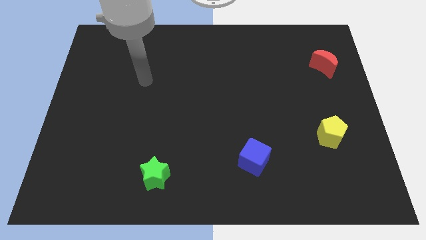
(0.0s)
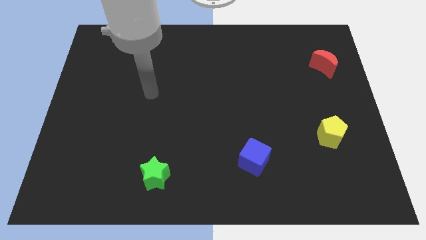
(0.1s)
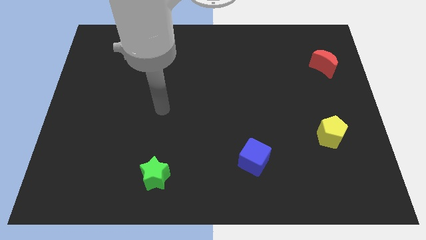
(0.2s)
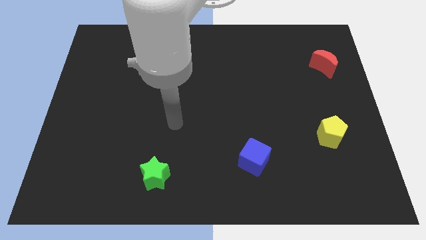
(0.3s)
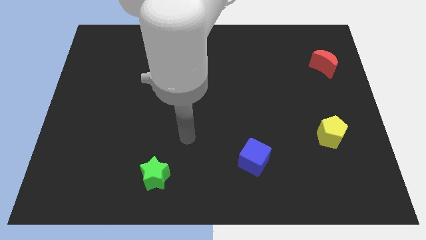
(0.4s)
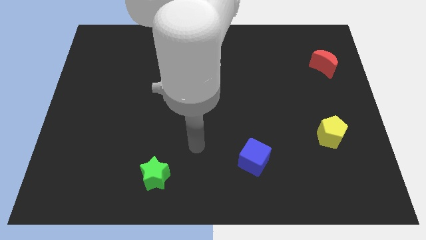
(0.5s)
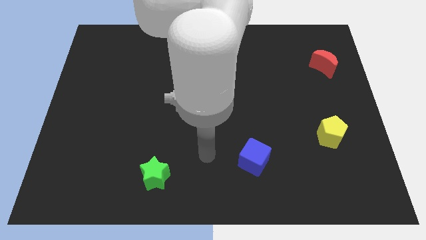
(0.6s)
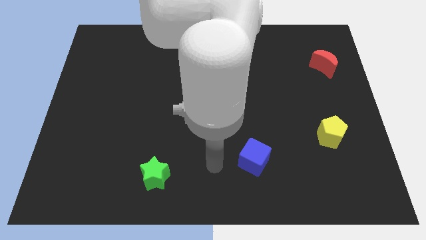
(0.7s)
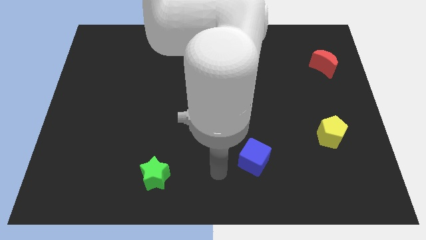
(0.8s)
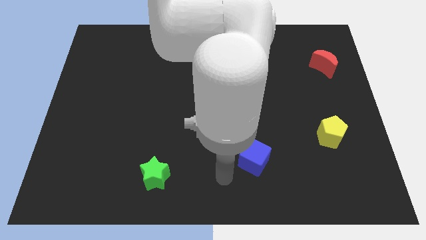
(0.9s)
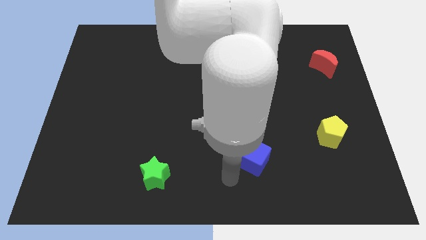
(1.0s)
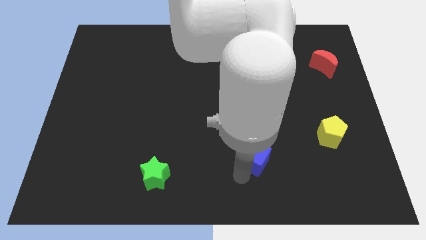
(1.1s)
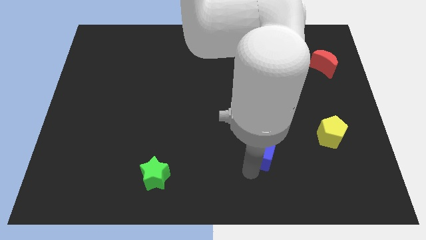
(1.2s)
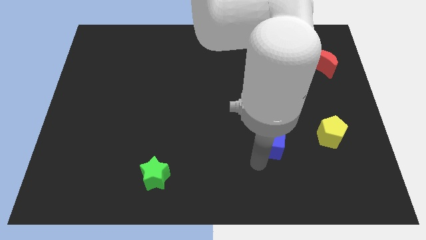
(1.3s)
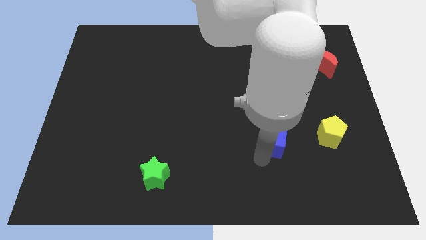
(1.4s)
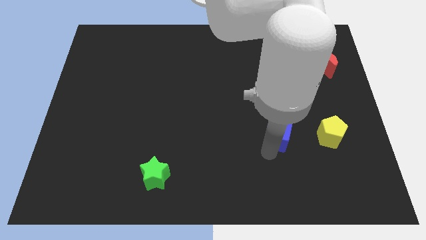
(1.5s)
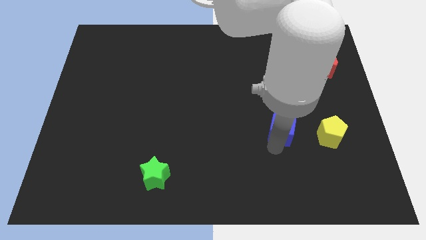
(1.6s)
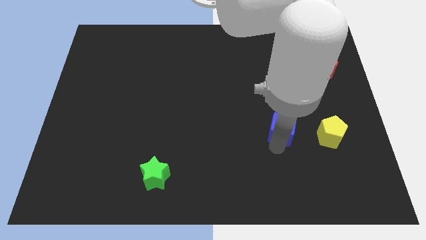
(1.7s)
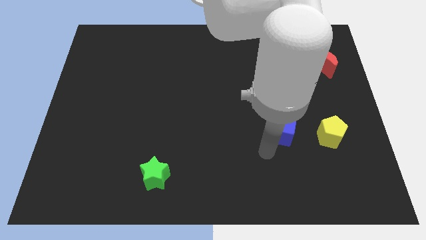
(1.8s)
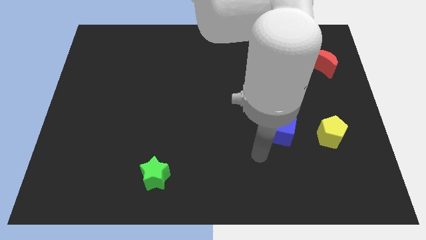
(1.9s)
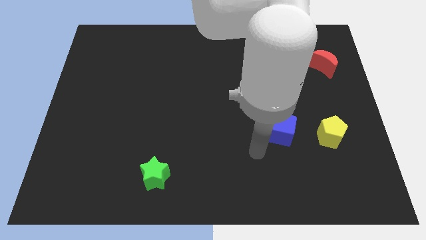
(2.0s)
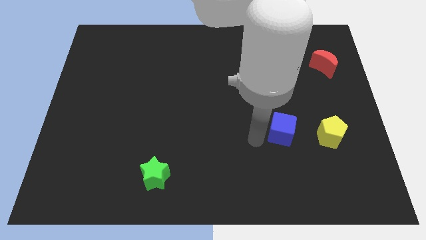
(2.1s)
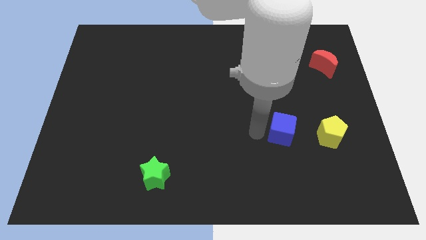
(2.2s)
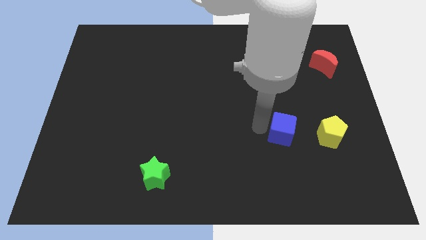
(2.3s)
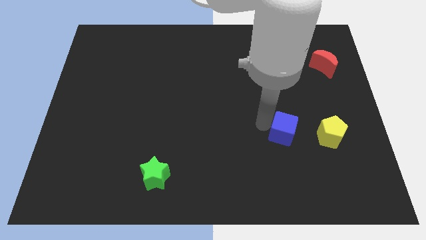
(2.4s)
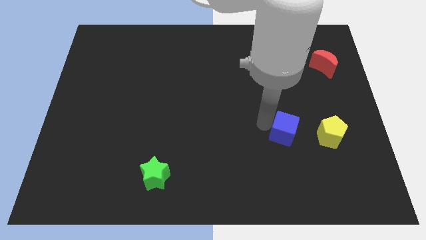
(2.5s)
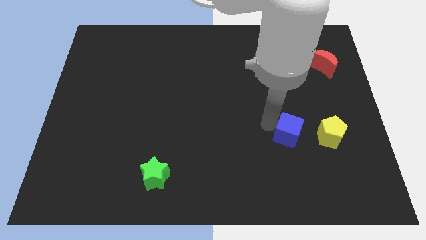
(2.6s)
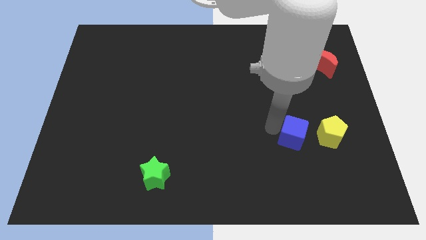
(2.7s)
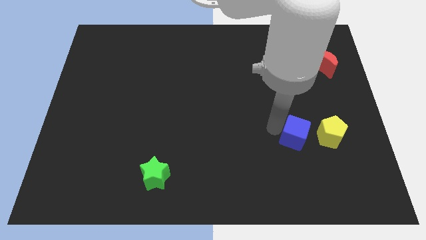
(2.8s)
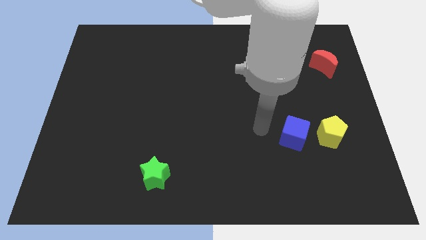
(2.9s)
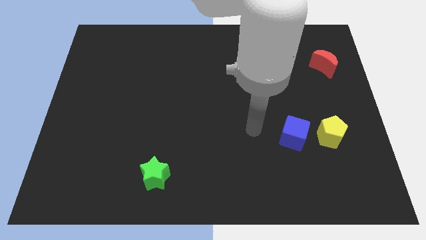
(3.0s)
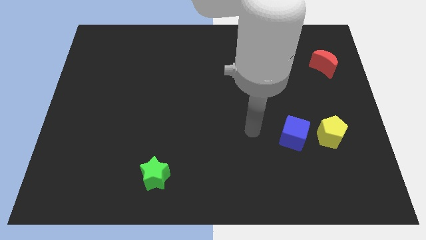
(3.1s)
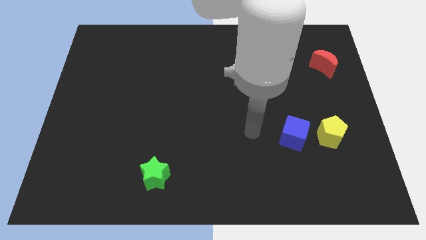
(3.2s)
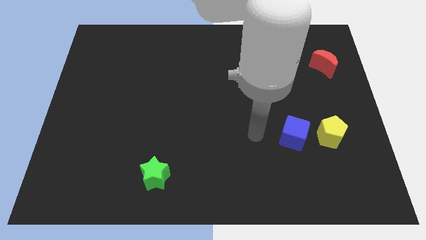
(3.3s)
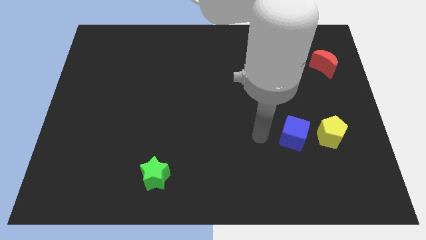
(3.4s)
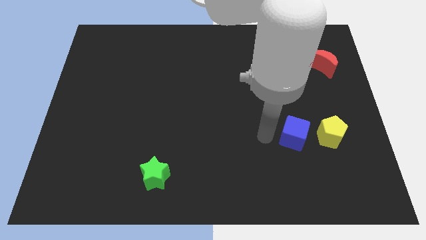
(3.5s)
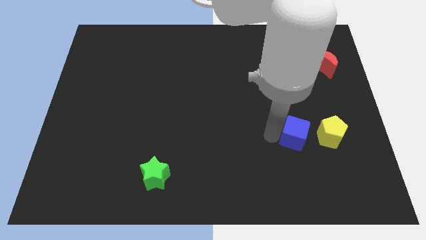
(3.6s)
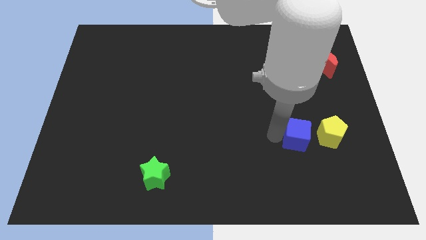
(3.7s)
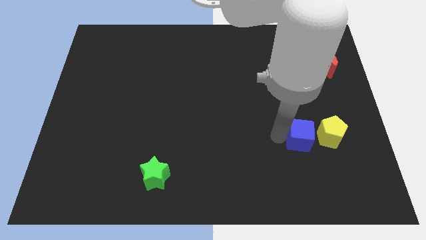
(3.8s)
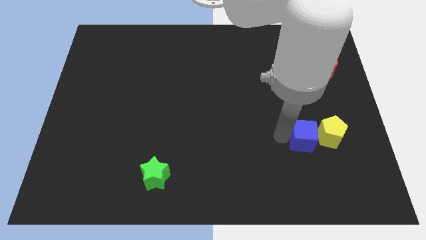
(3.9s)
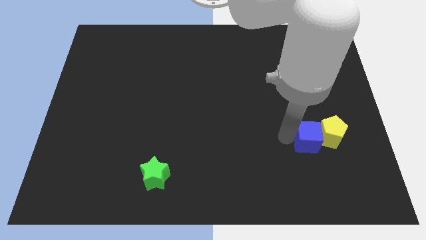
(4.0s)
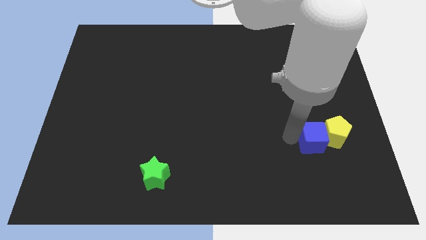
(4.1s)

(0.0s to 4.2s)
put the blue cube to the pentagon

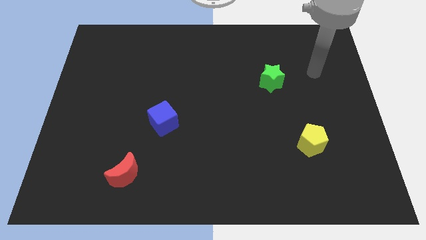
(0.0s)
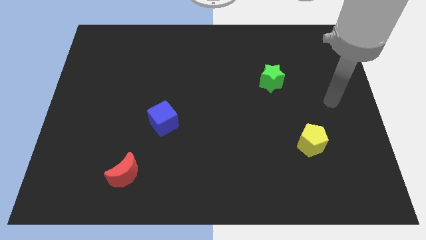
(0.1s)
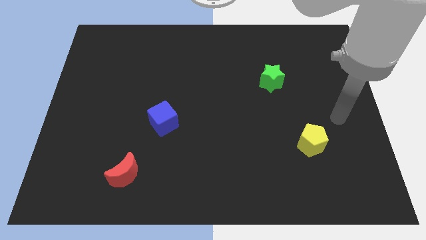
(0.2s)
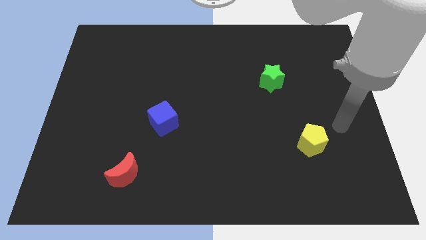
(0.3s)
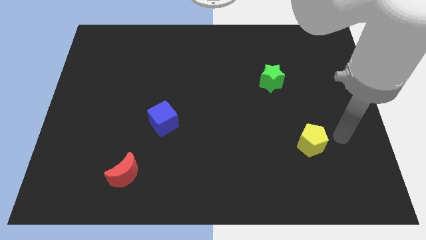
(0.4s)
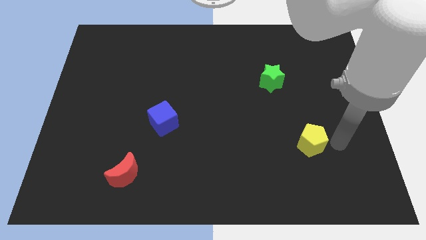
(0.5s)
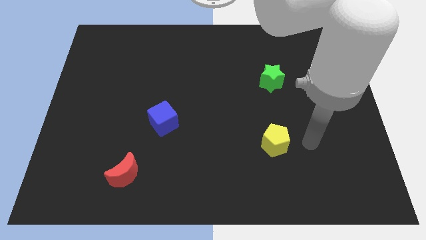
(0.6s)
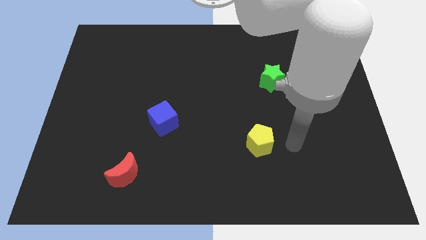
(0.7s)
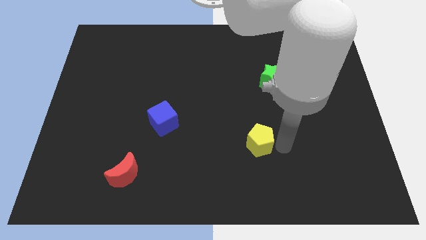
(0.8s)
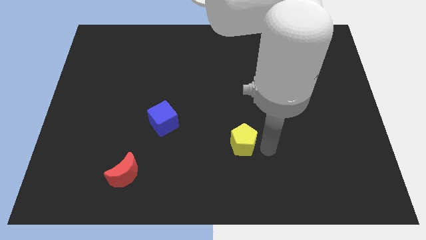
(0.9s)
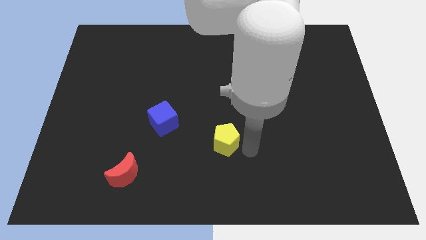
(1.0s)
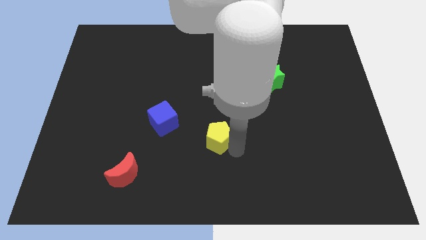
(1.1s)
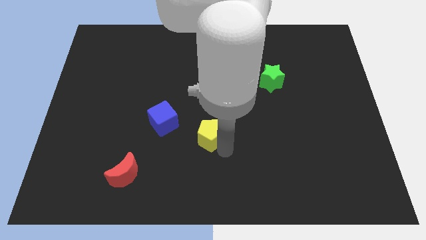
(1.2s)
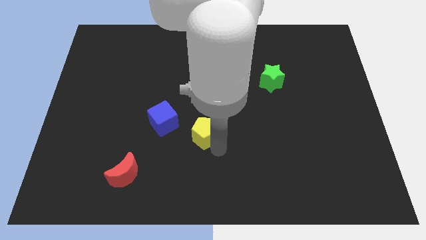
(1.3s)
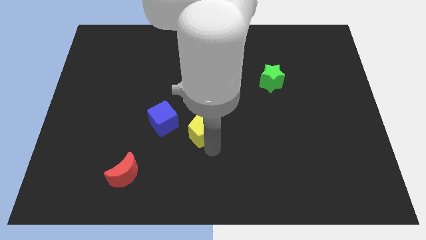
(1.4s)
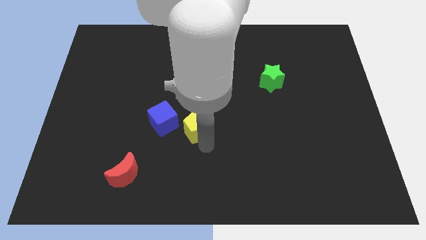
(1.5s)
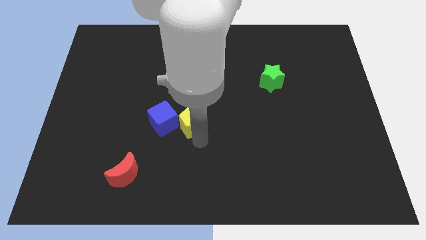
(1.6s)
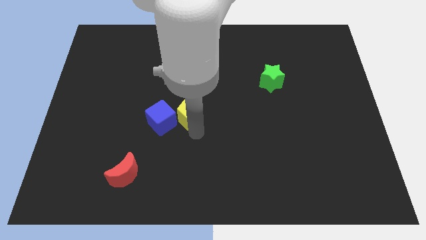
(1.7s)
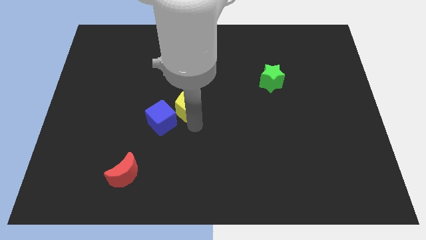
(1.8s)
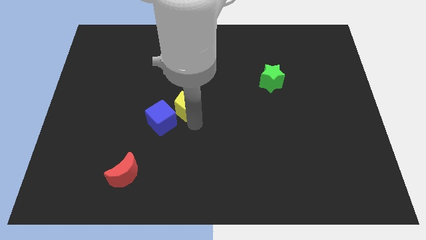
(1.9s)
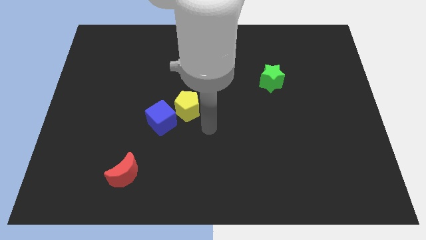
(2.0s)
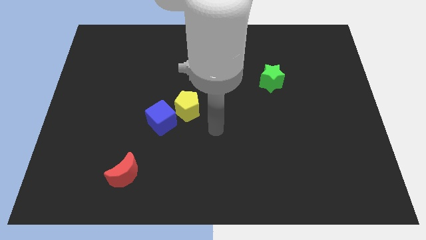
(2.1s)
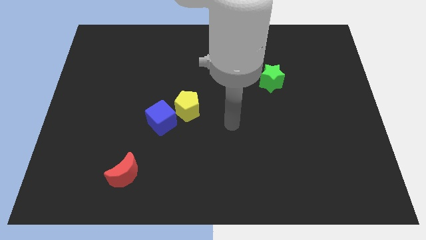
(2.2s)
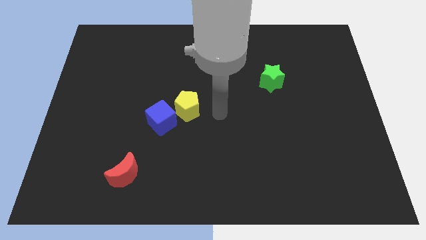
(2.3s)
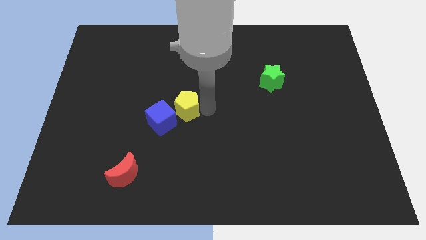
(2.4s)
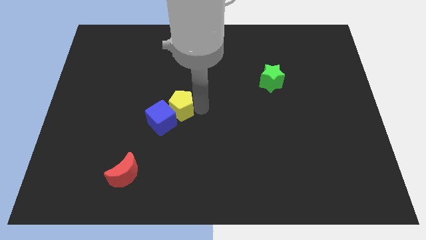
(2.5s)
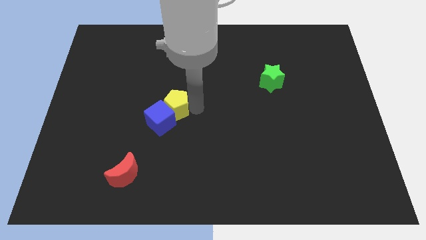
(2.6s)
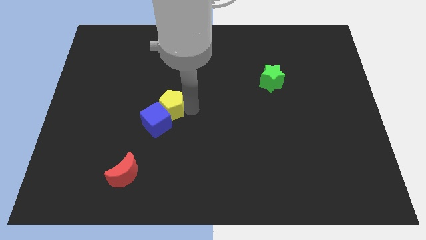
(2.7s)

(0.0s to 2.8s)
push the yellow pentagon next to the blue block

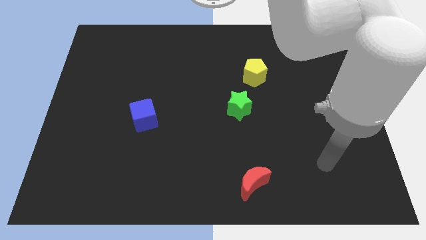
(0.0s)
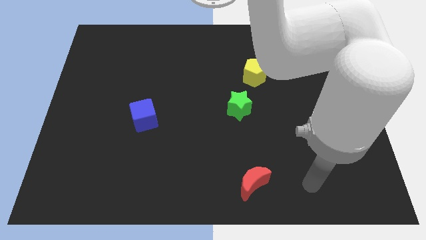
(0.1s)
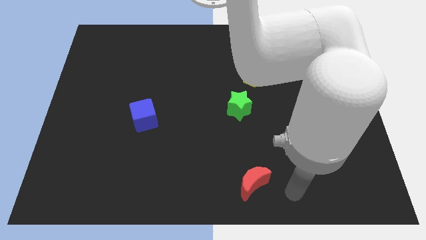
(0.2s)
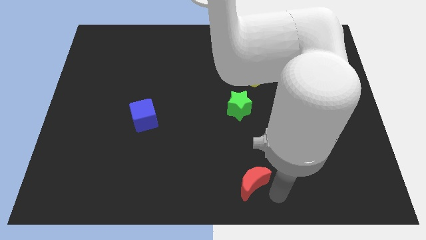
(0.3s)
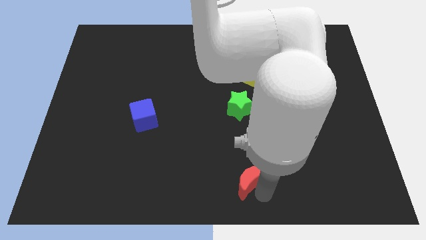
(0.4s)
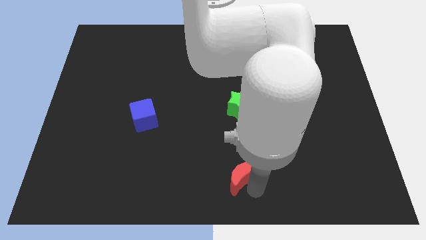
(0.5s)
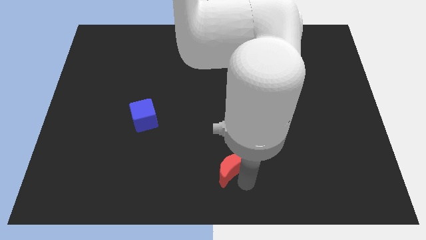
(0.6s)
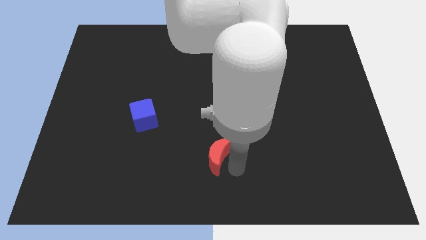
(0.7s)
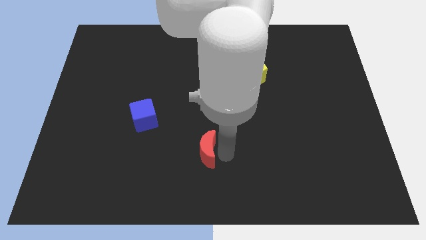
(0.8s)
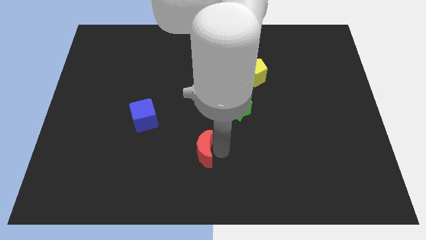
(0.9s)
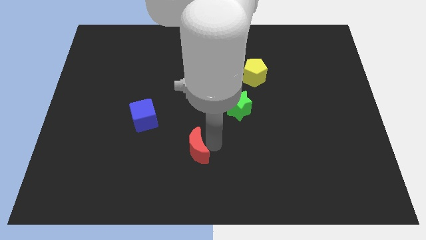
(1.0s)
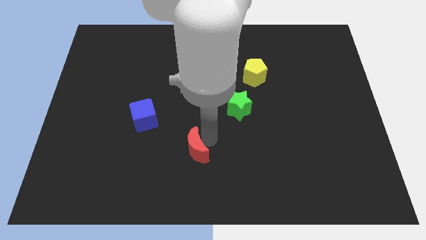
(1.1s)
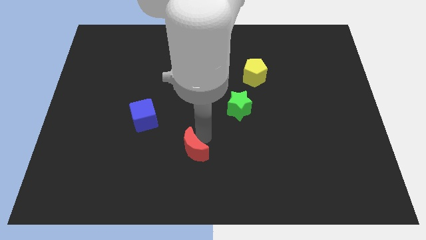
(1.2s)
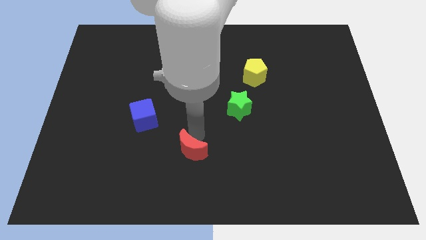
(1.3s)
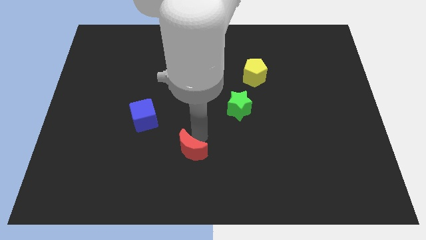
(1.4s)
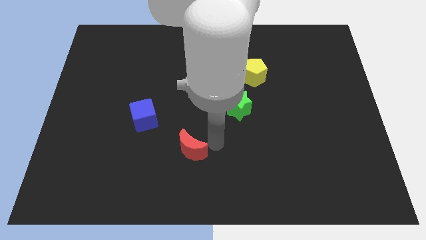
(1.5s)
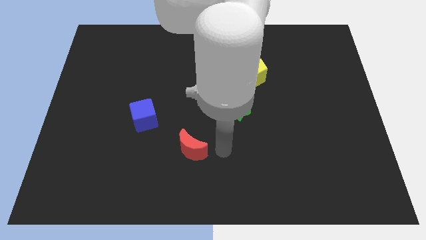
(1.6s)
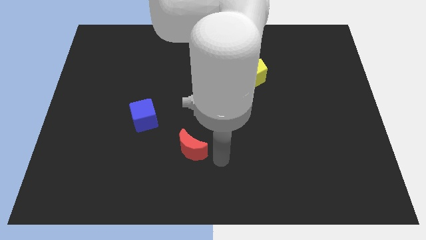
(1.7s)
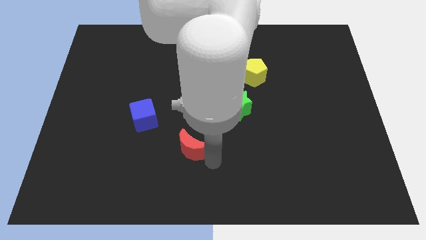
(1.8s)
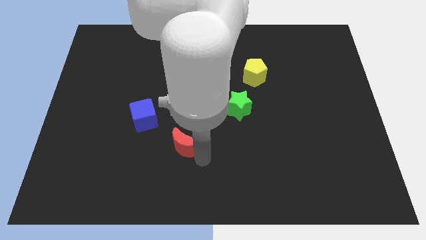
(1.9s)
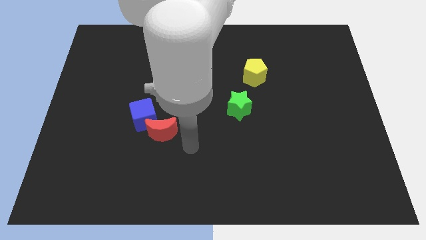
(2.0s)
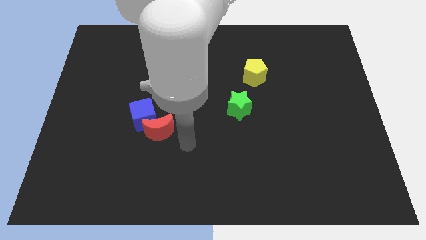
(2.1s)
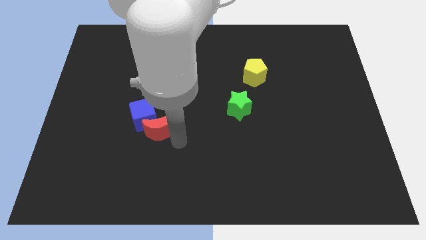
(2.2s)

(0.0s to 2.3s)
push the moon to the blue block
